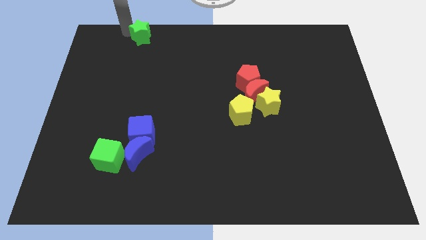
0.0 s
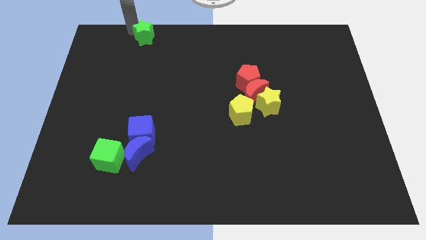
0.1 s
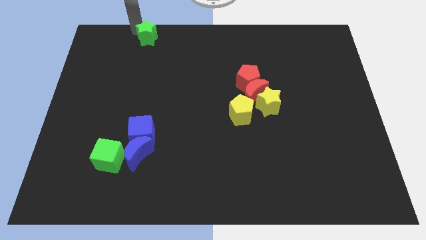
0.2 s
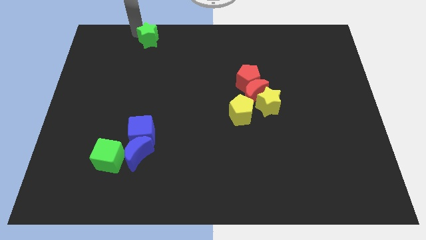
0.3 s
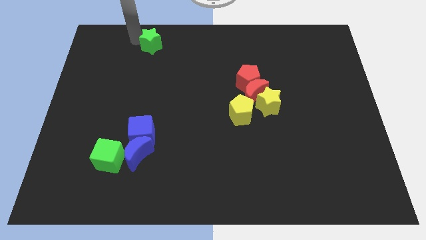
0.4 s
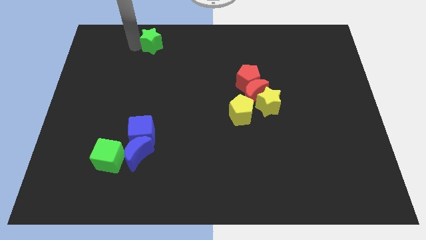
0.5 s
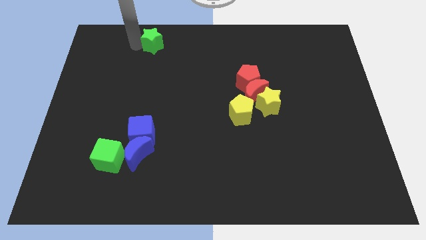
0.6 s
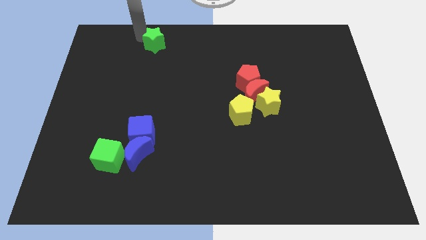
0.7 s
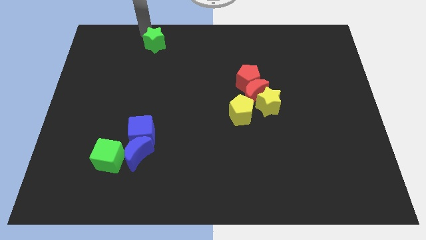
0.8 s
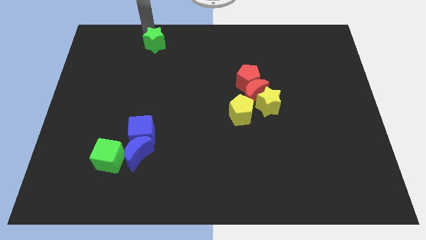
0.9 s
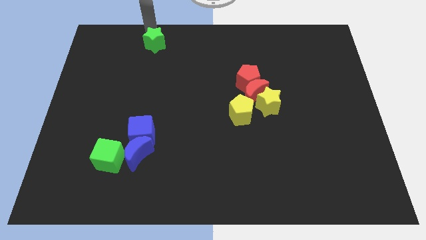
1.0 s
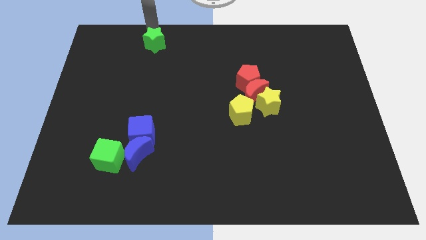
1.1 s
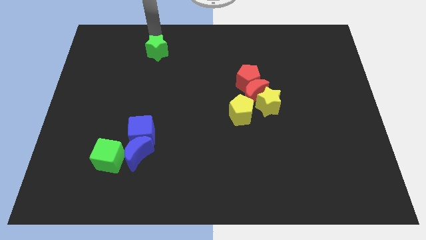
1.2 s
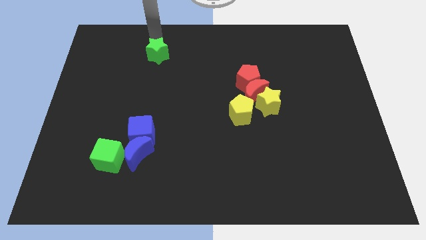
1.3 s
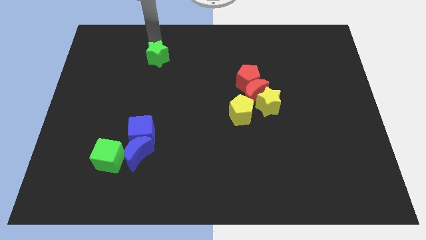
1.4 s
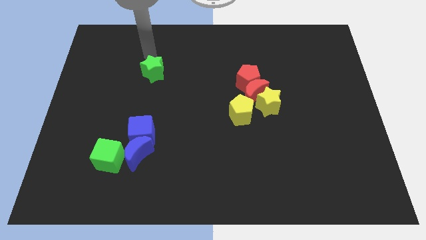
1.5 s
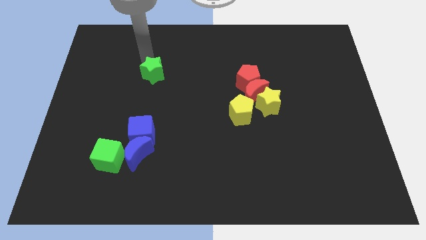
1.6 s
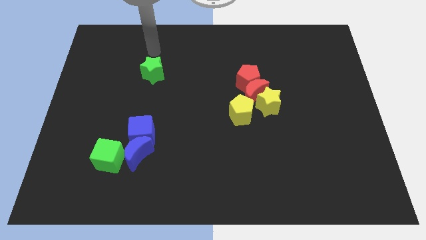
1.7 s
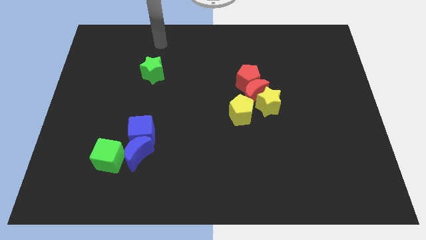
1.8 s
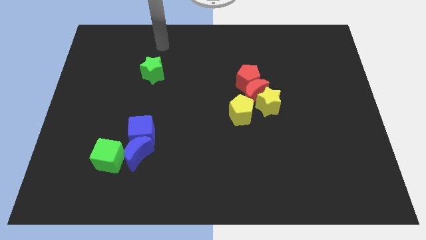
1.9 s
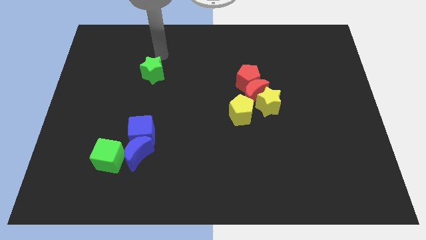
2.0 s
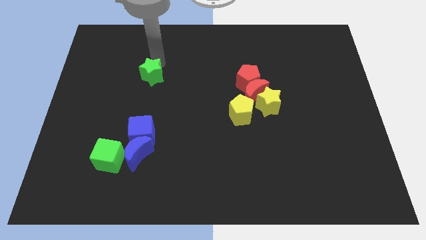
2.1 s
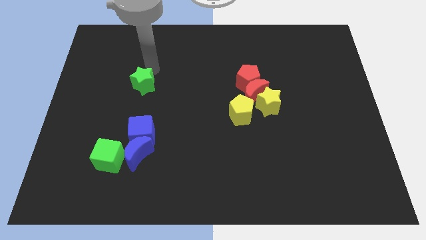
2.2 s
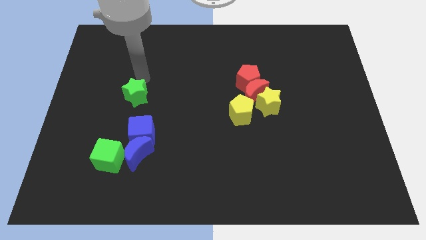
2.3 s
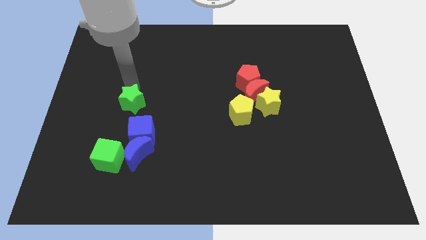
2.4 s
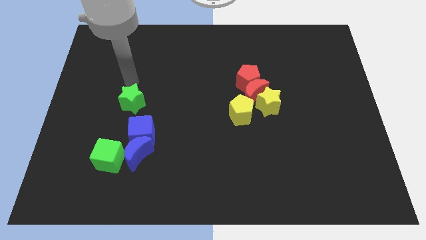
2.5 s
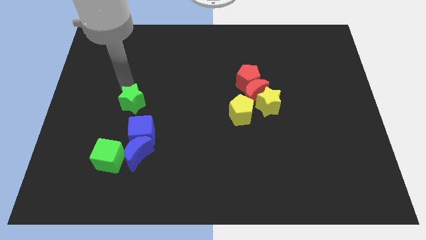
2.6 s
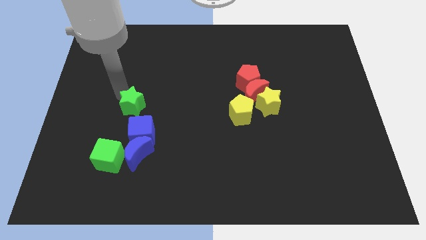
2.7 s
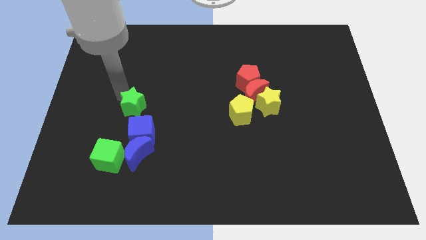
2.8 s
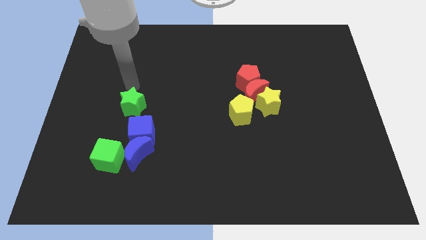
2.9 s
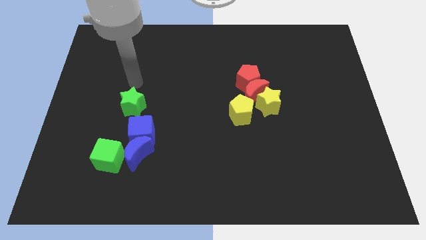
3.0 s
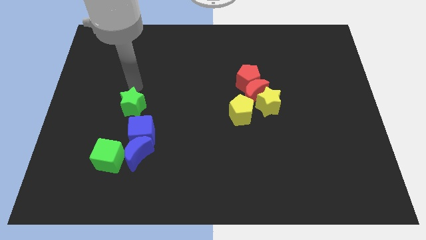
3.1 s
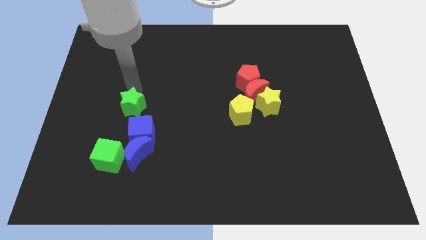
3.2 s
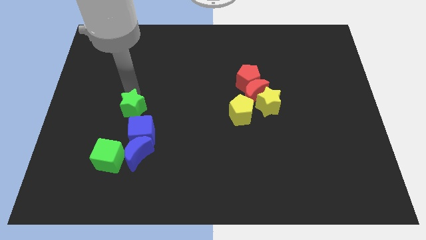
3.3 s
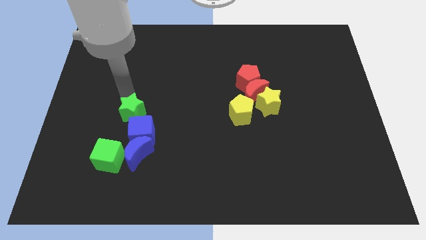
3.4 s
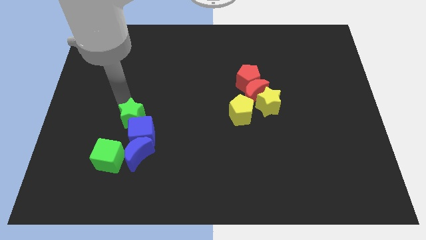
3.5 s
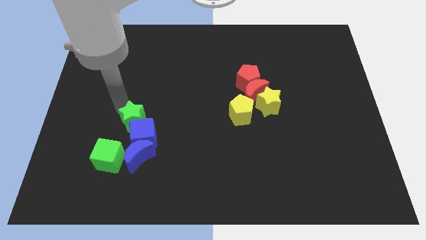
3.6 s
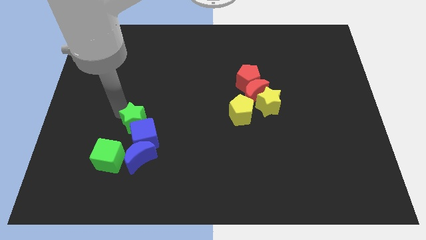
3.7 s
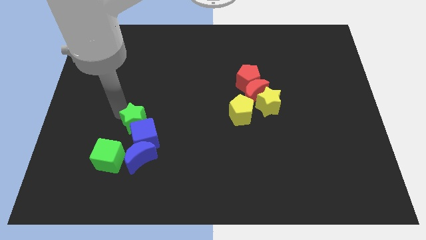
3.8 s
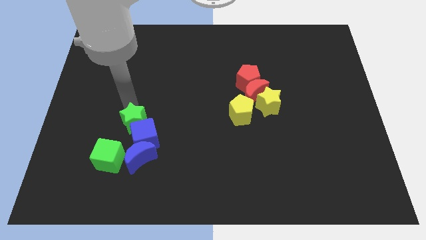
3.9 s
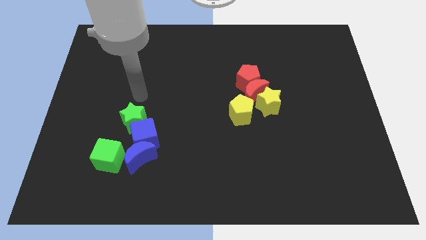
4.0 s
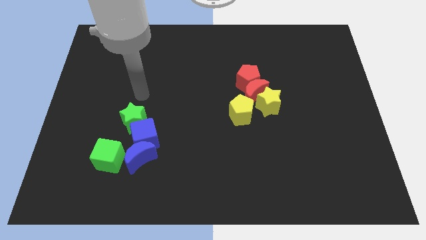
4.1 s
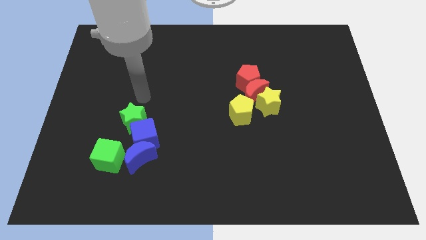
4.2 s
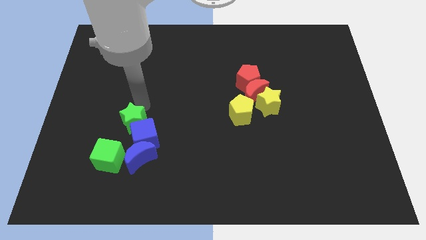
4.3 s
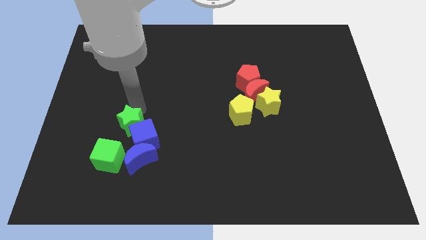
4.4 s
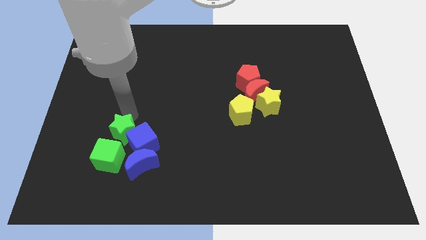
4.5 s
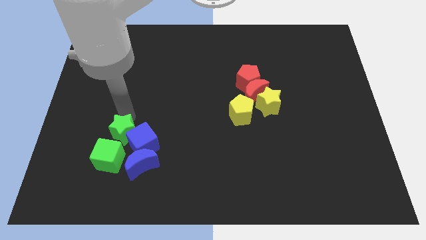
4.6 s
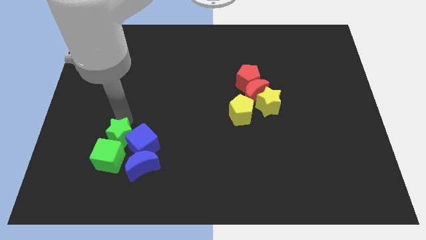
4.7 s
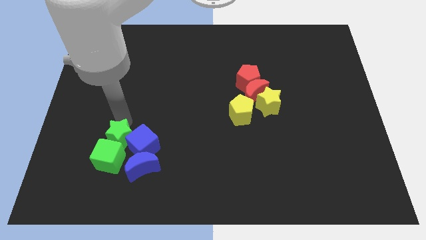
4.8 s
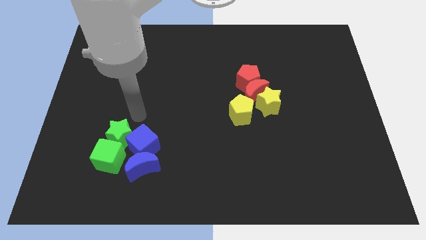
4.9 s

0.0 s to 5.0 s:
push the green star into the blue cube and green cube

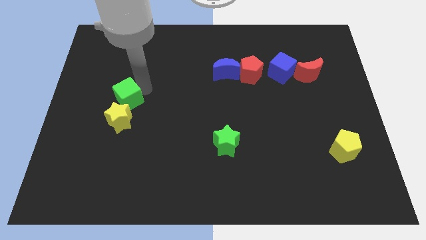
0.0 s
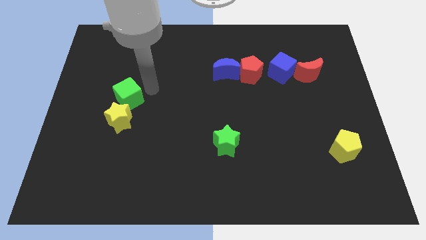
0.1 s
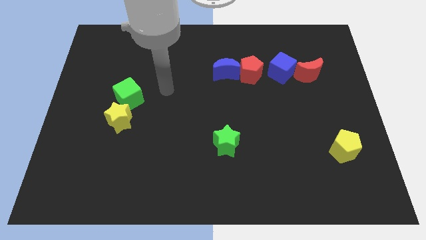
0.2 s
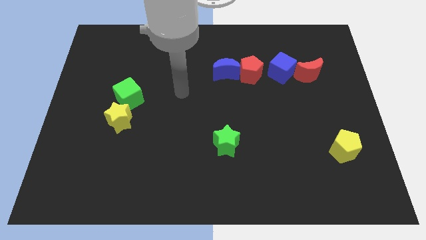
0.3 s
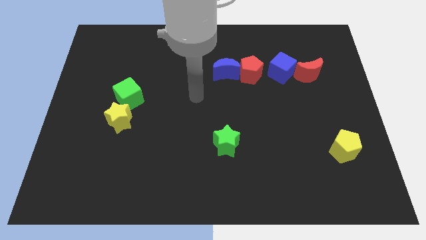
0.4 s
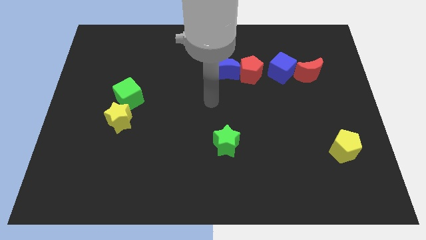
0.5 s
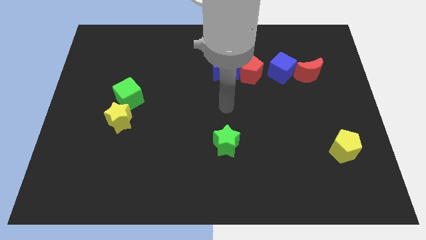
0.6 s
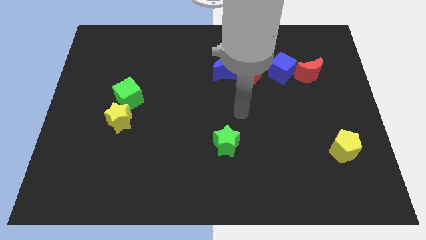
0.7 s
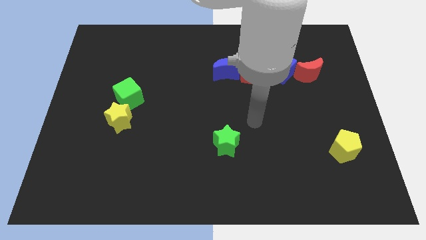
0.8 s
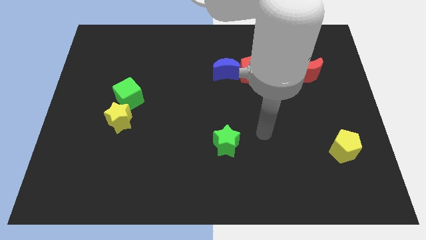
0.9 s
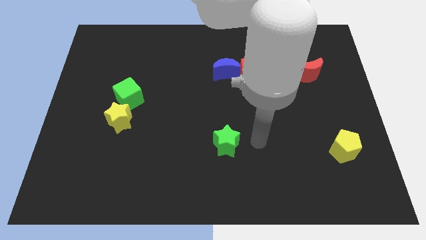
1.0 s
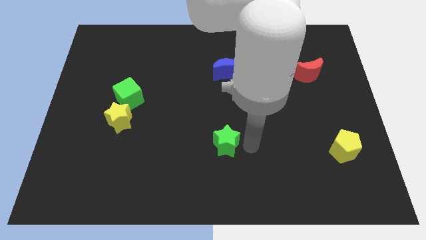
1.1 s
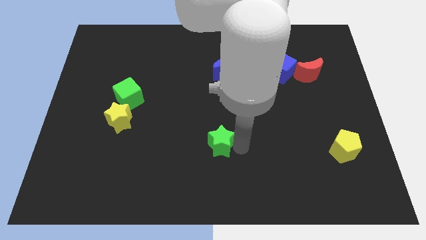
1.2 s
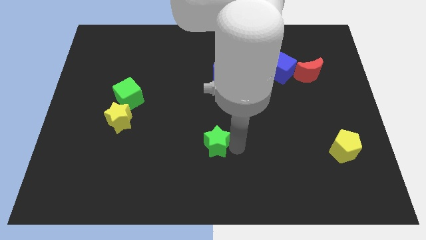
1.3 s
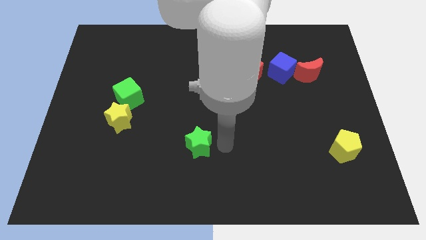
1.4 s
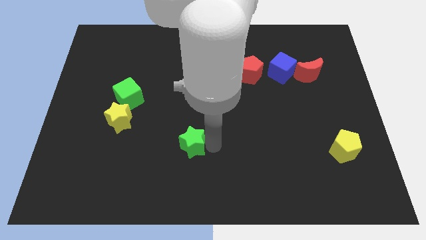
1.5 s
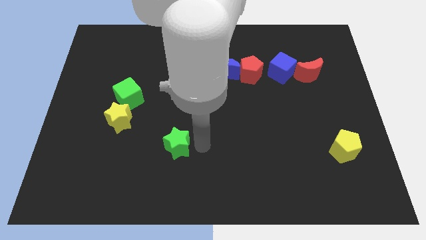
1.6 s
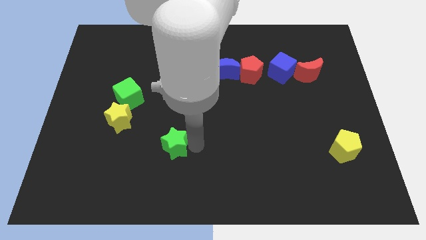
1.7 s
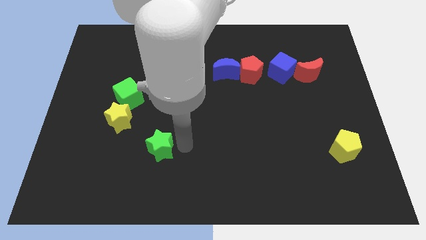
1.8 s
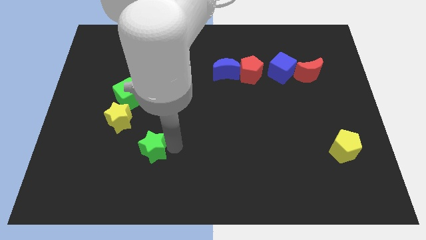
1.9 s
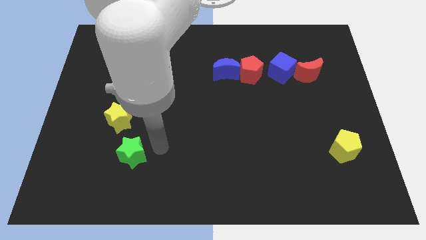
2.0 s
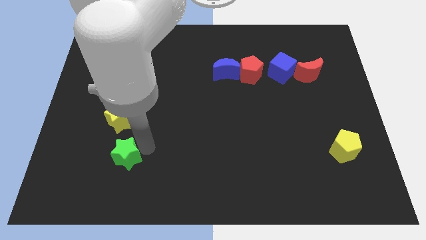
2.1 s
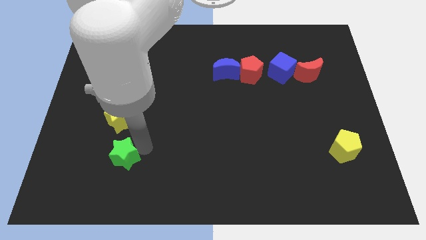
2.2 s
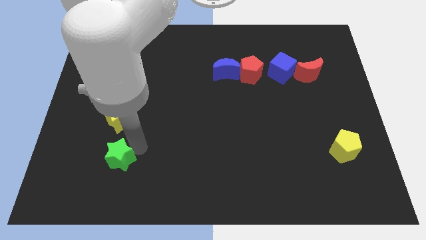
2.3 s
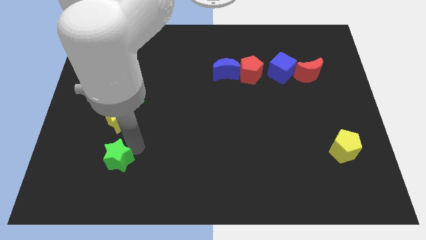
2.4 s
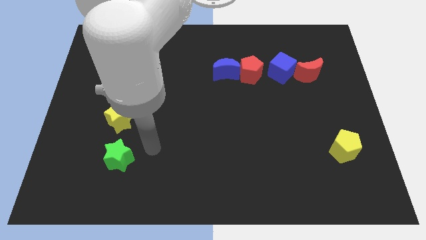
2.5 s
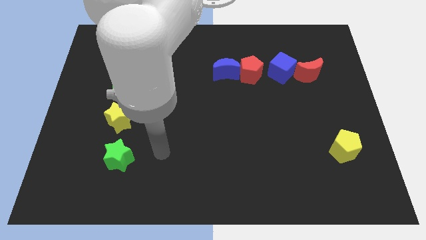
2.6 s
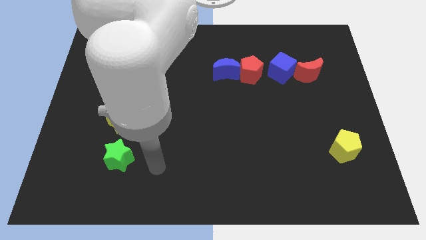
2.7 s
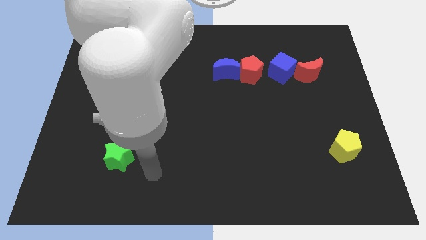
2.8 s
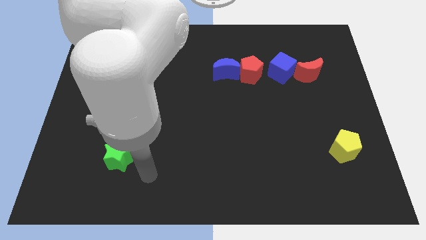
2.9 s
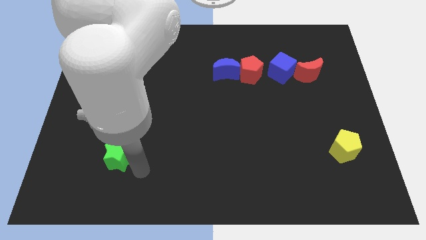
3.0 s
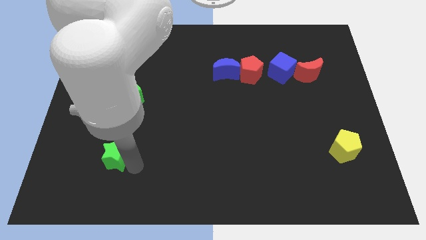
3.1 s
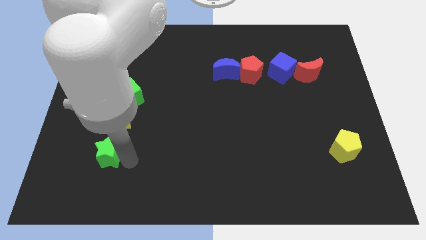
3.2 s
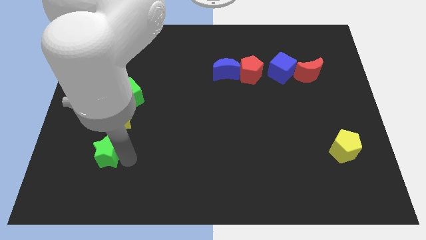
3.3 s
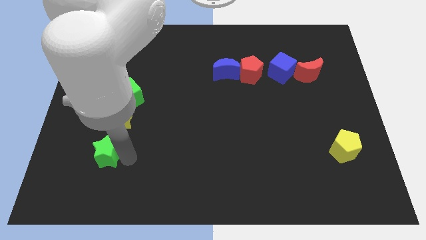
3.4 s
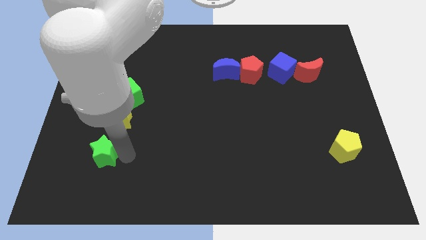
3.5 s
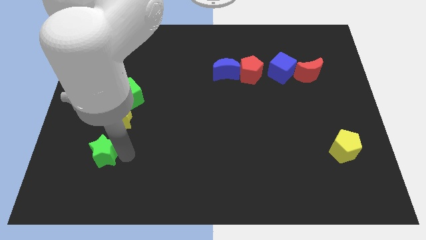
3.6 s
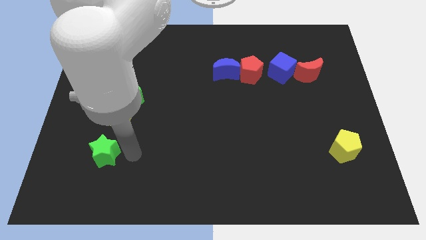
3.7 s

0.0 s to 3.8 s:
push the green star vertically at the bottom of the yellow star
